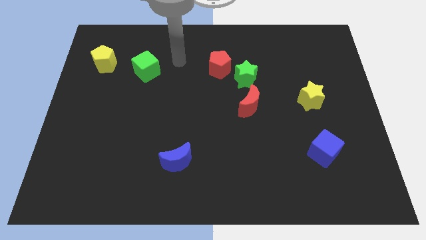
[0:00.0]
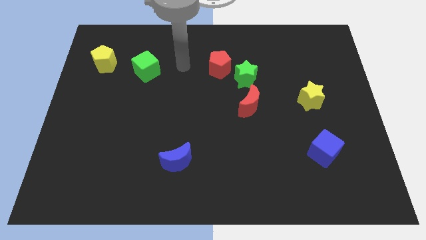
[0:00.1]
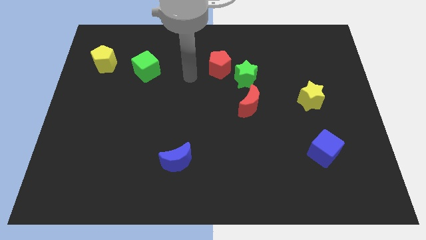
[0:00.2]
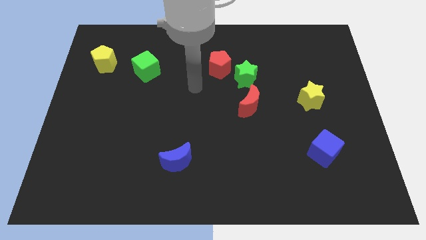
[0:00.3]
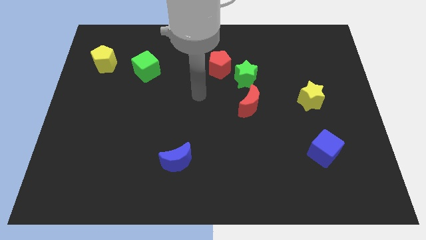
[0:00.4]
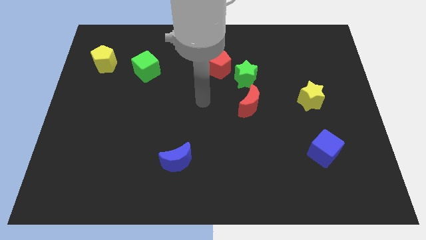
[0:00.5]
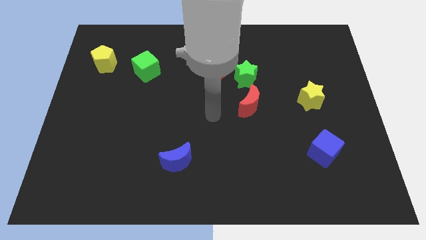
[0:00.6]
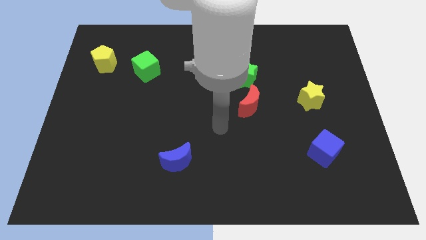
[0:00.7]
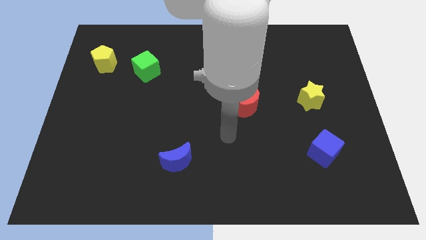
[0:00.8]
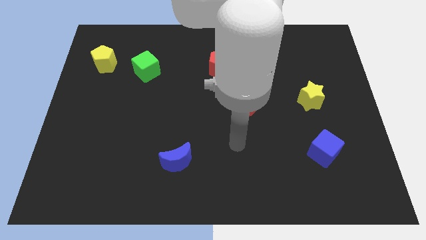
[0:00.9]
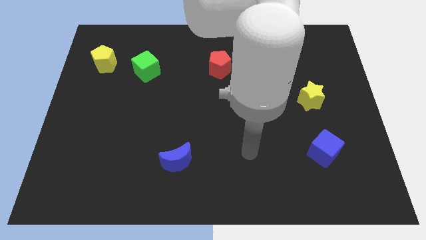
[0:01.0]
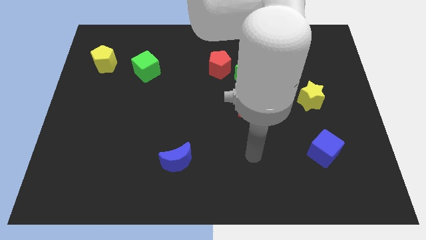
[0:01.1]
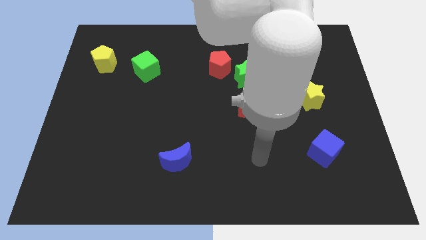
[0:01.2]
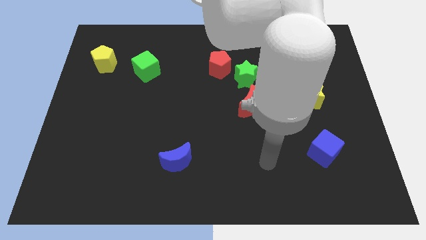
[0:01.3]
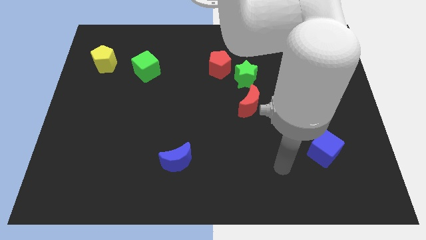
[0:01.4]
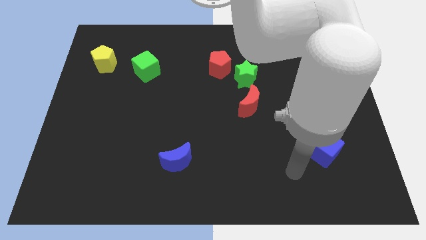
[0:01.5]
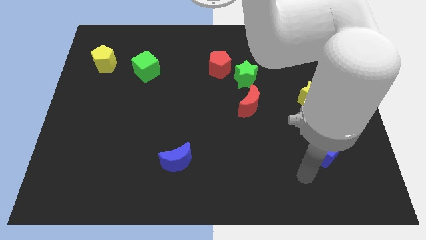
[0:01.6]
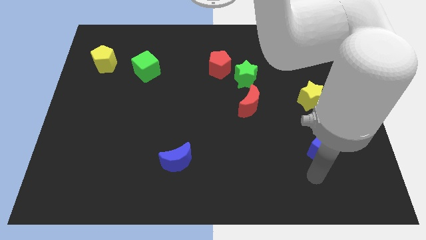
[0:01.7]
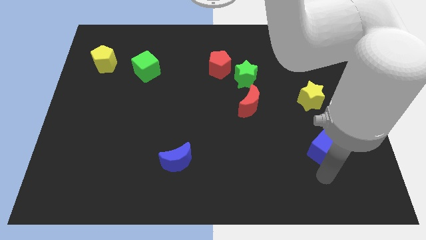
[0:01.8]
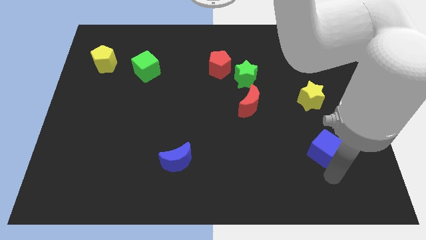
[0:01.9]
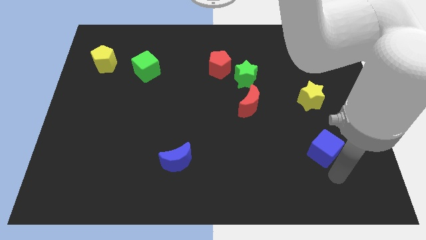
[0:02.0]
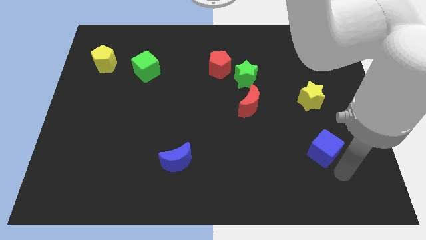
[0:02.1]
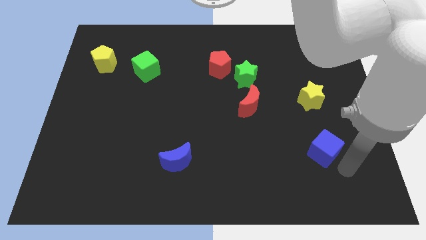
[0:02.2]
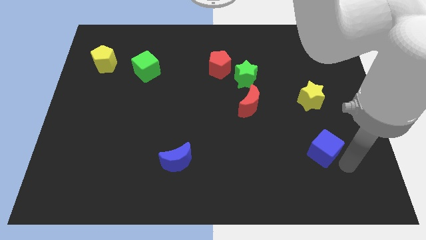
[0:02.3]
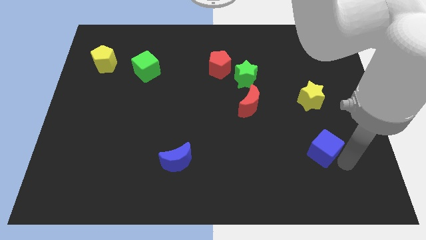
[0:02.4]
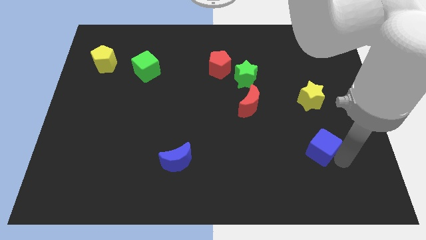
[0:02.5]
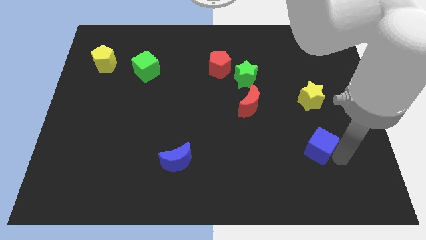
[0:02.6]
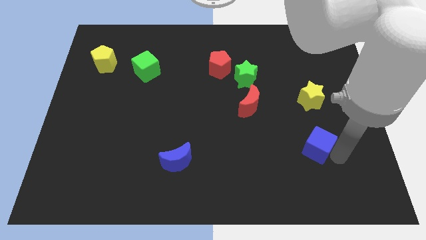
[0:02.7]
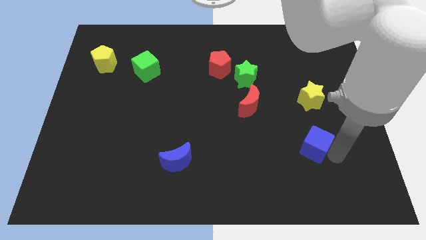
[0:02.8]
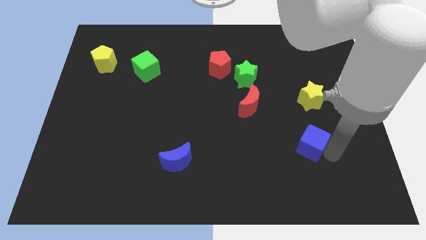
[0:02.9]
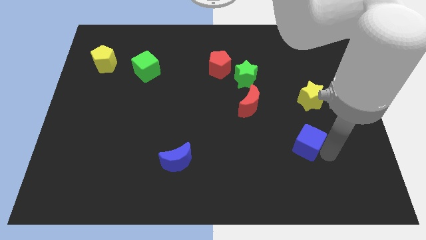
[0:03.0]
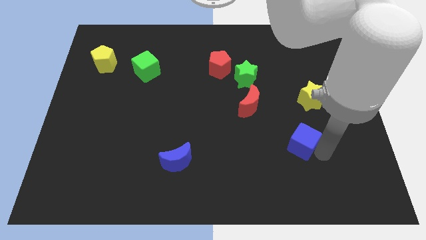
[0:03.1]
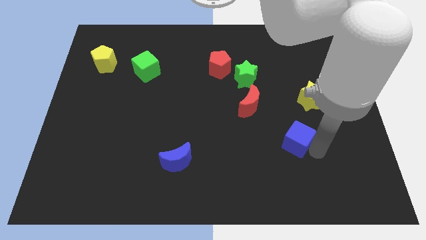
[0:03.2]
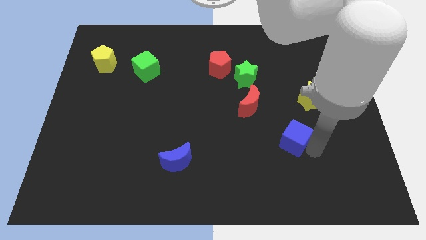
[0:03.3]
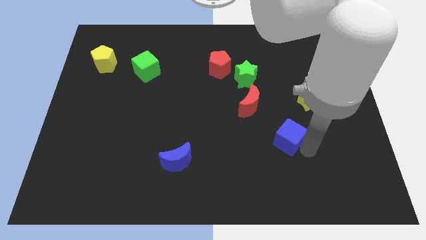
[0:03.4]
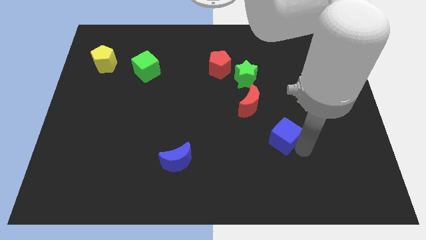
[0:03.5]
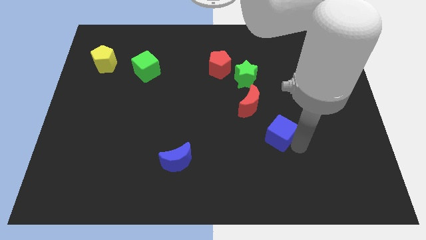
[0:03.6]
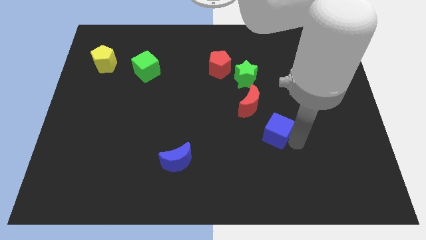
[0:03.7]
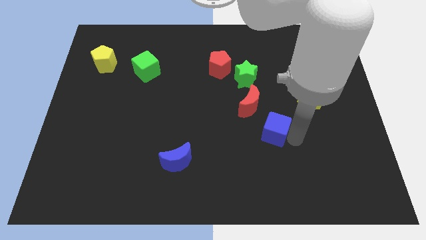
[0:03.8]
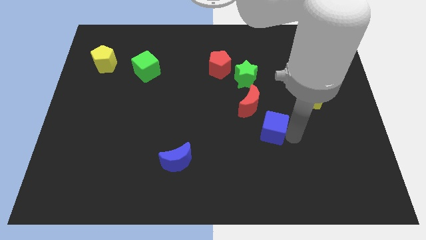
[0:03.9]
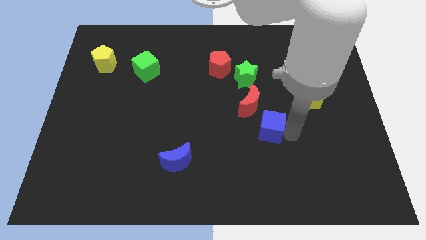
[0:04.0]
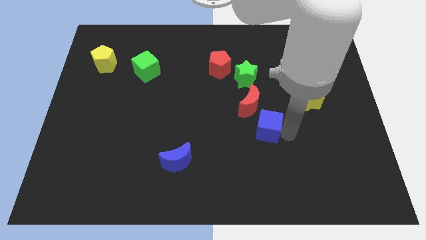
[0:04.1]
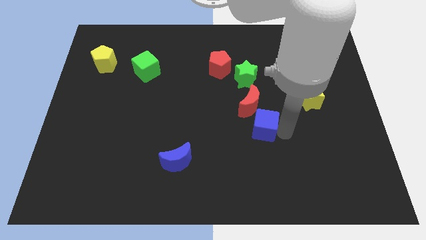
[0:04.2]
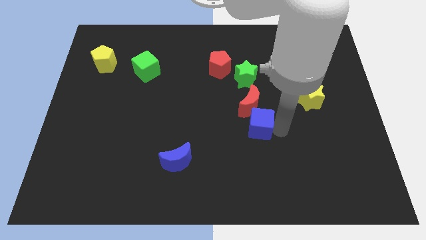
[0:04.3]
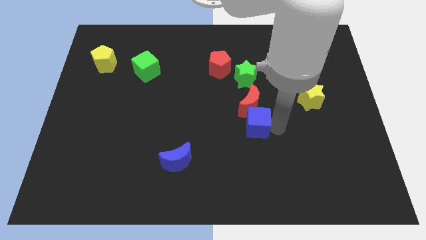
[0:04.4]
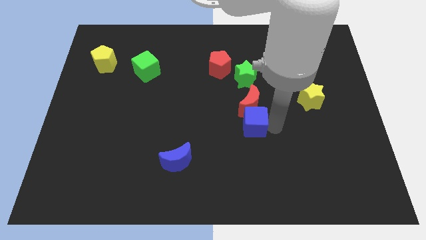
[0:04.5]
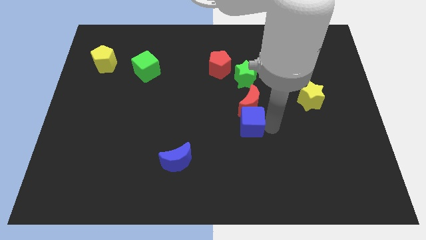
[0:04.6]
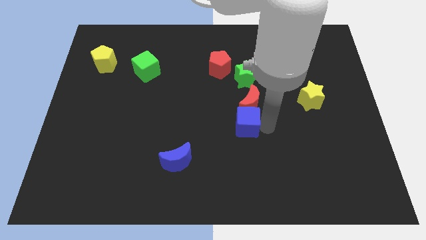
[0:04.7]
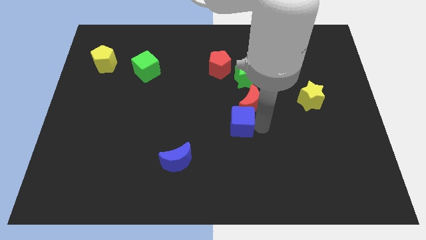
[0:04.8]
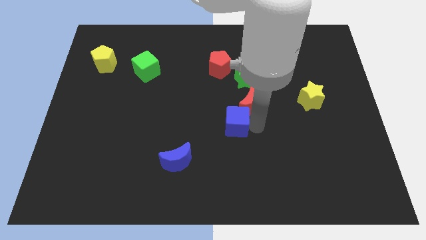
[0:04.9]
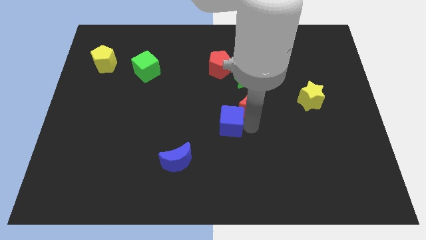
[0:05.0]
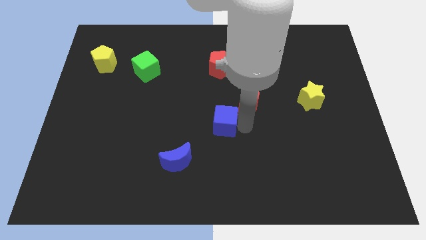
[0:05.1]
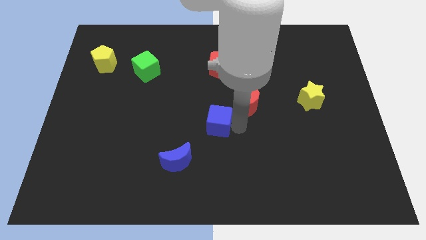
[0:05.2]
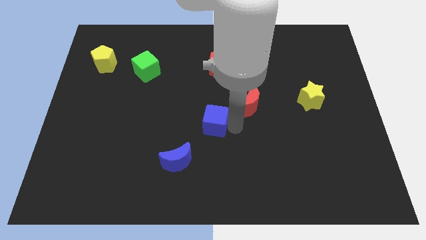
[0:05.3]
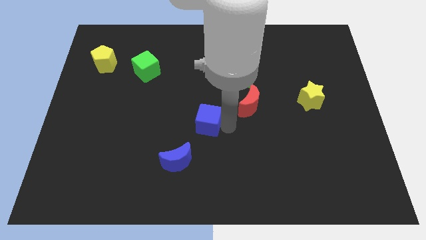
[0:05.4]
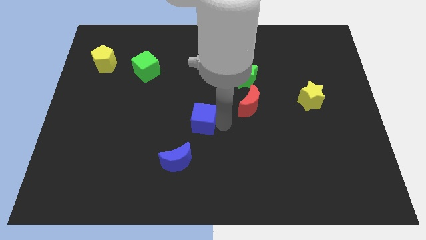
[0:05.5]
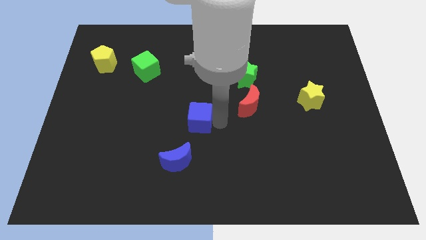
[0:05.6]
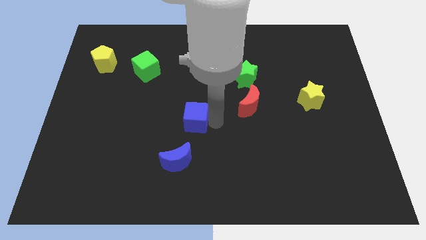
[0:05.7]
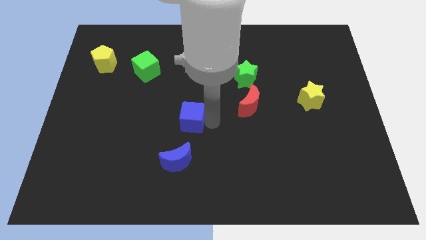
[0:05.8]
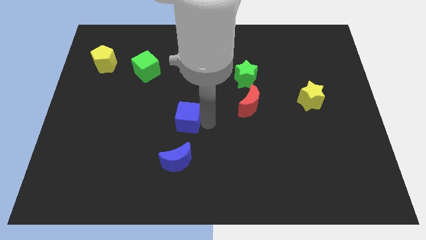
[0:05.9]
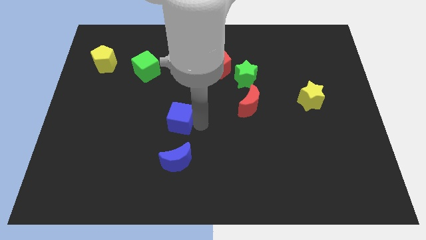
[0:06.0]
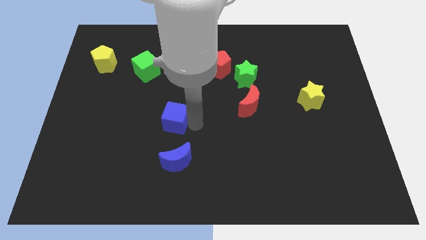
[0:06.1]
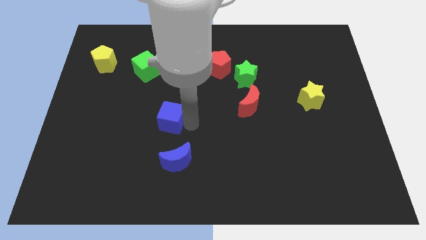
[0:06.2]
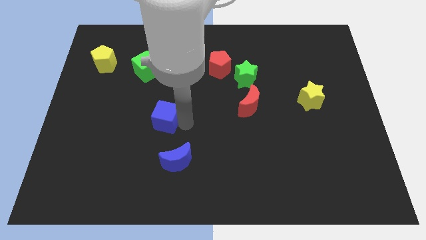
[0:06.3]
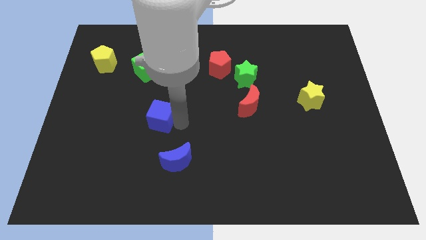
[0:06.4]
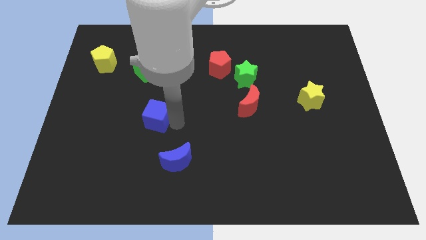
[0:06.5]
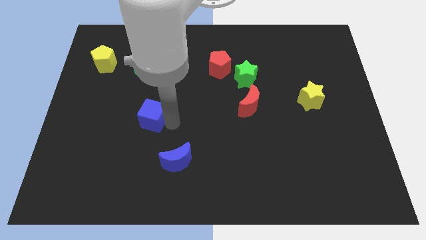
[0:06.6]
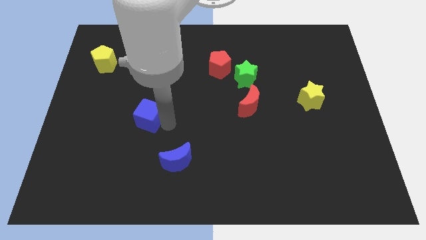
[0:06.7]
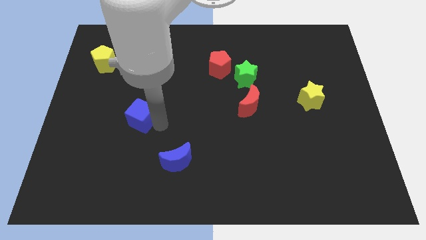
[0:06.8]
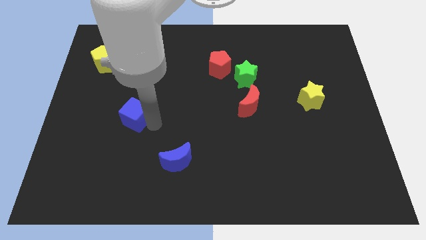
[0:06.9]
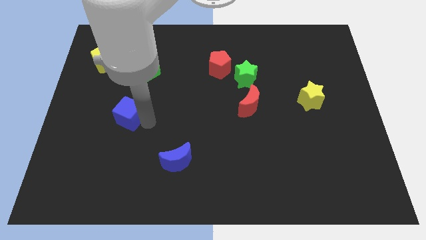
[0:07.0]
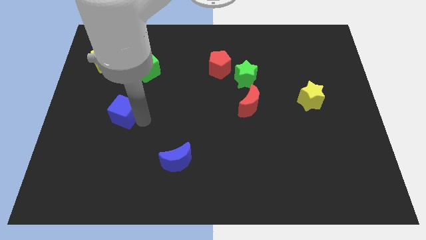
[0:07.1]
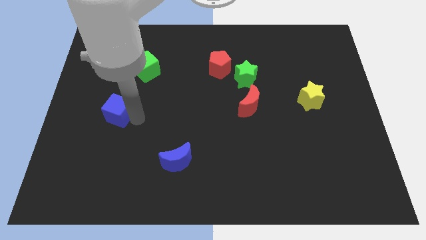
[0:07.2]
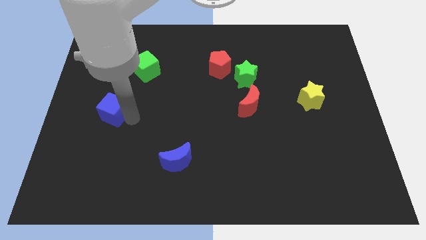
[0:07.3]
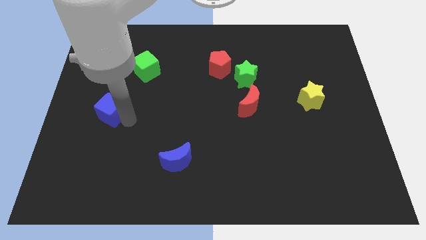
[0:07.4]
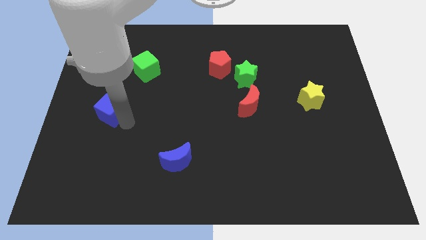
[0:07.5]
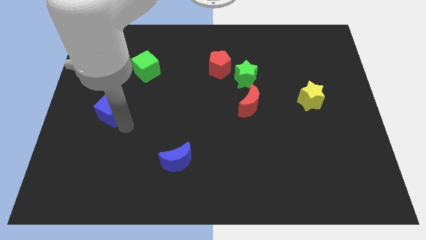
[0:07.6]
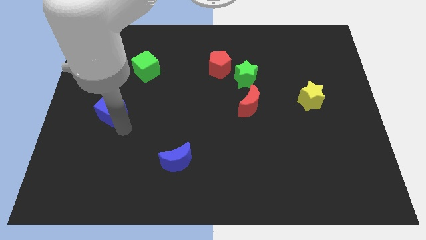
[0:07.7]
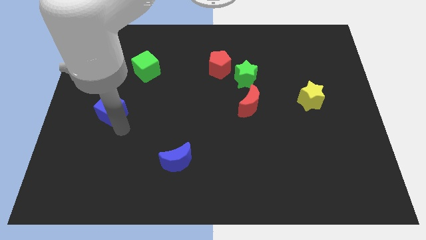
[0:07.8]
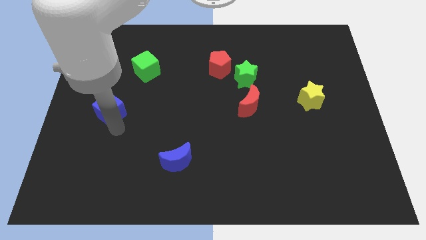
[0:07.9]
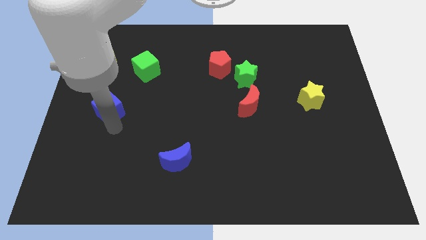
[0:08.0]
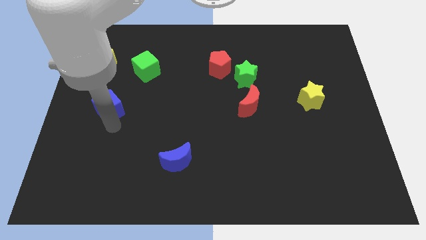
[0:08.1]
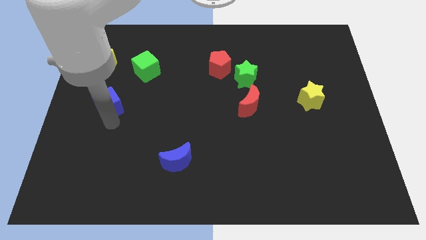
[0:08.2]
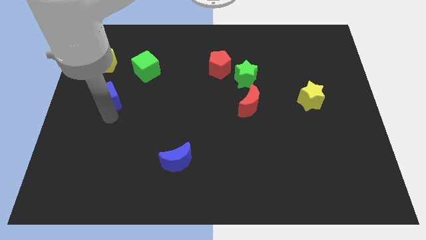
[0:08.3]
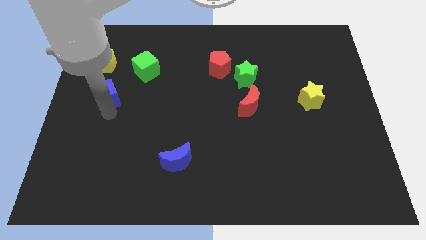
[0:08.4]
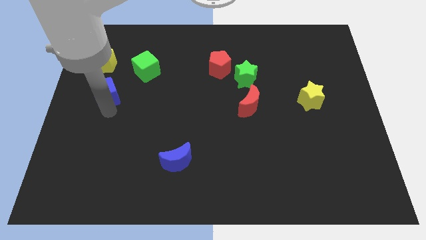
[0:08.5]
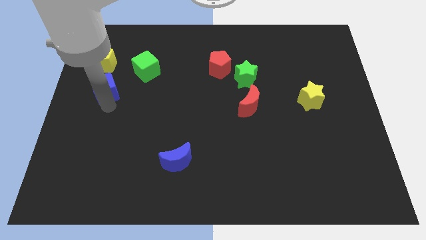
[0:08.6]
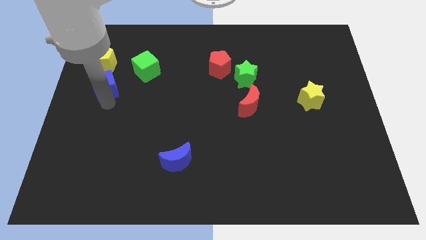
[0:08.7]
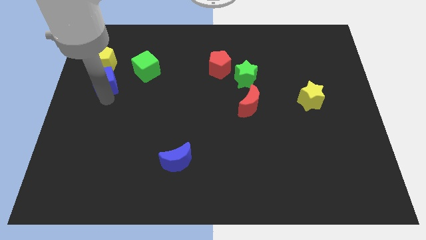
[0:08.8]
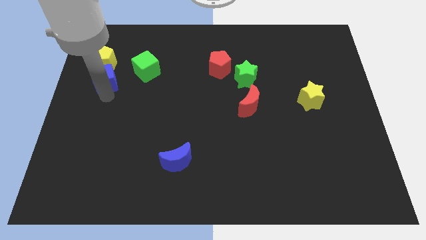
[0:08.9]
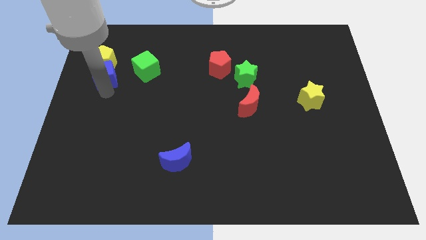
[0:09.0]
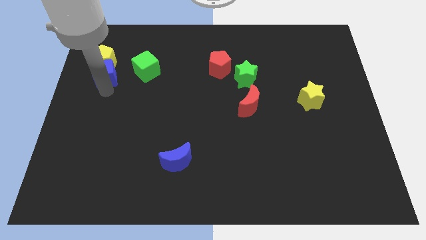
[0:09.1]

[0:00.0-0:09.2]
push the blue cube close to the yellow pentagon
